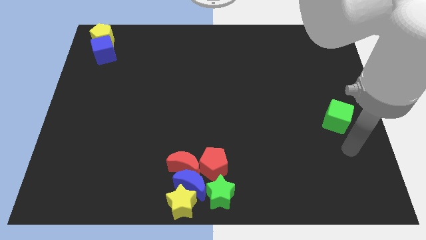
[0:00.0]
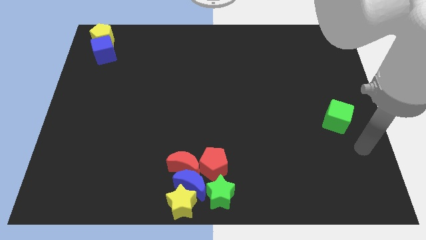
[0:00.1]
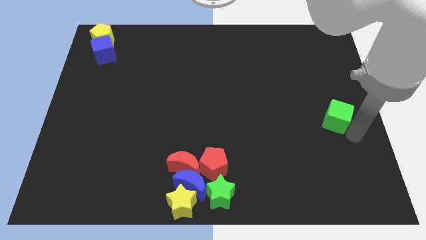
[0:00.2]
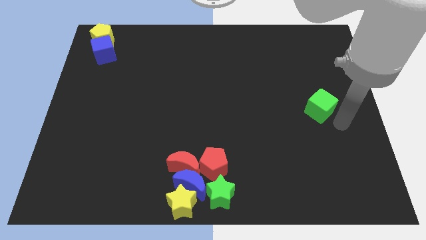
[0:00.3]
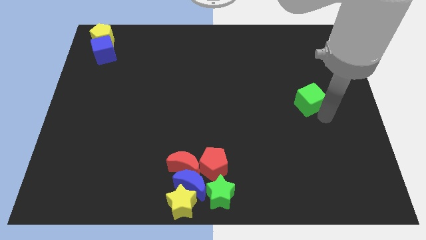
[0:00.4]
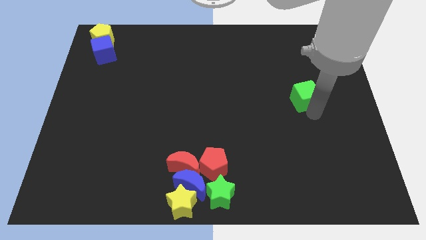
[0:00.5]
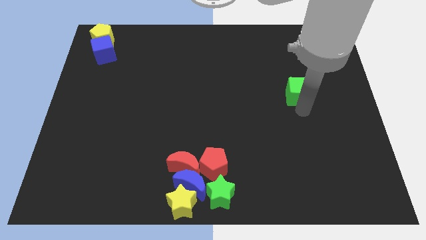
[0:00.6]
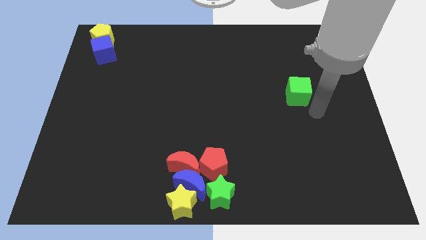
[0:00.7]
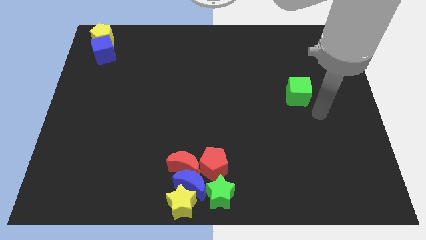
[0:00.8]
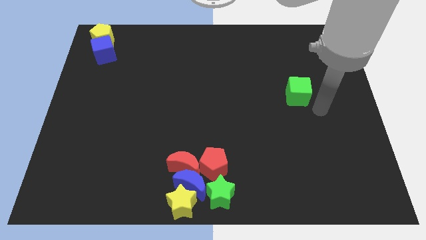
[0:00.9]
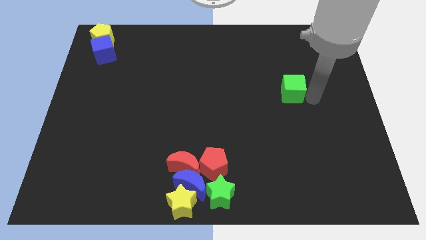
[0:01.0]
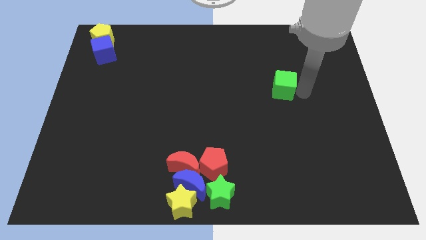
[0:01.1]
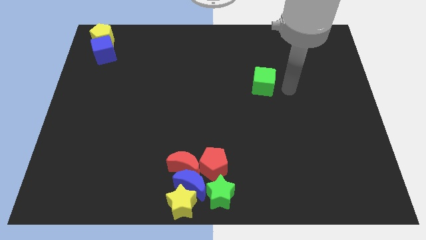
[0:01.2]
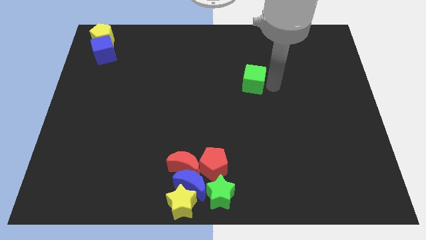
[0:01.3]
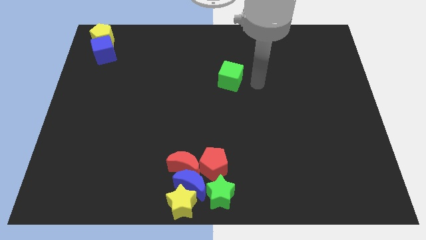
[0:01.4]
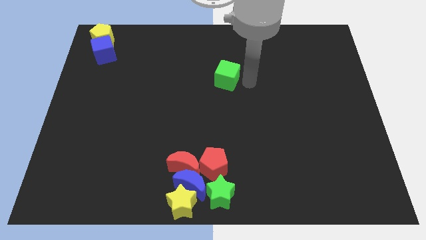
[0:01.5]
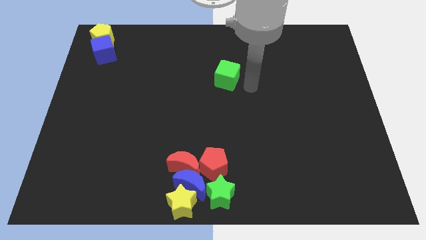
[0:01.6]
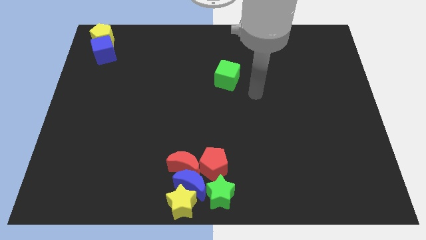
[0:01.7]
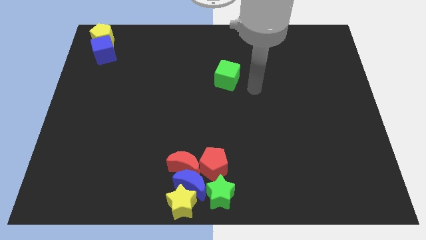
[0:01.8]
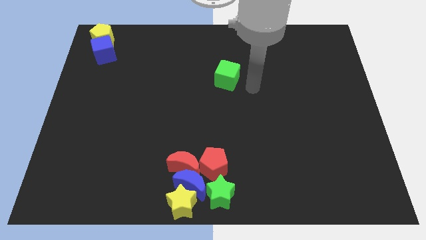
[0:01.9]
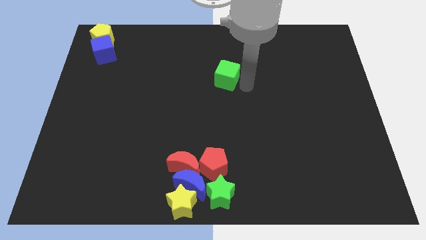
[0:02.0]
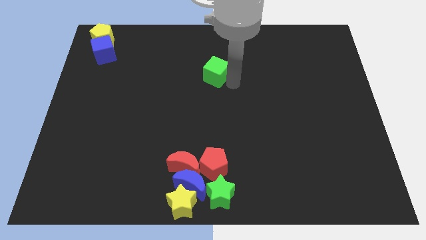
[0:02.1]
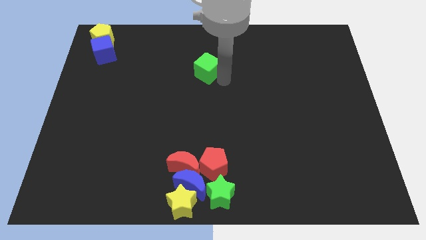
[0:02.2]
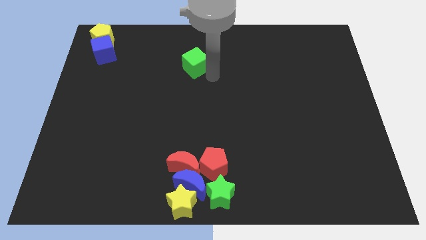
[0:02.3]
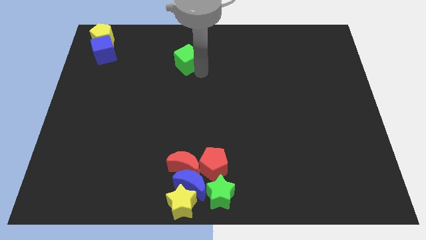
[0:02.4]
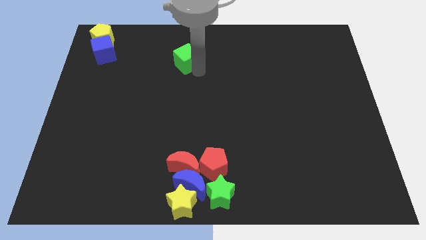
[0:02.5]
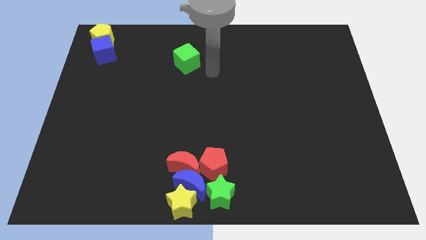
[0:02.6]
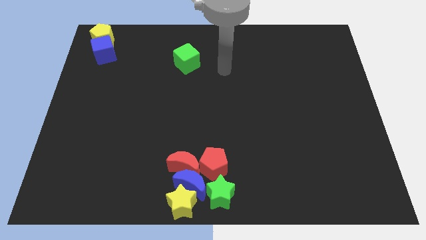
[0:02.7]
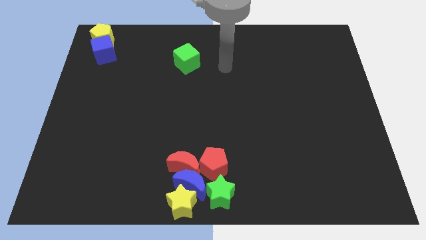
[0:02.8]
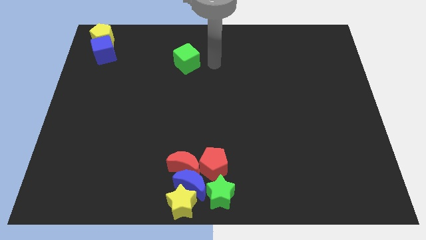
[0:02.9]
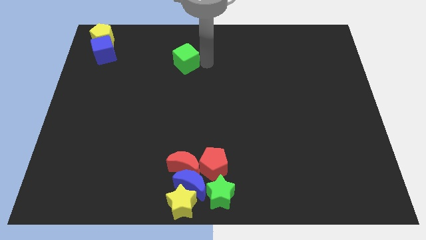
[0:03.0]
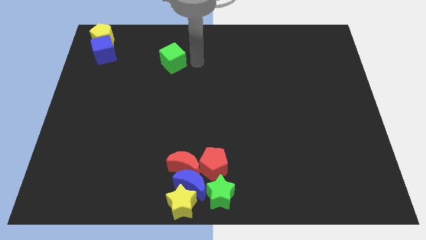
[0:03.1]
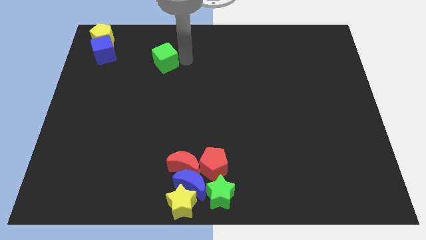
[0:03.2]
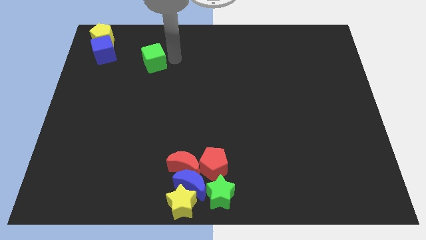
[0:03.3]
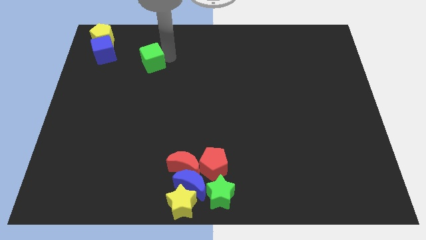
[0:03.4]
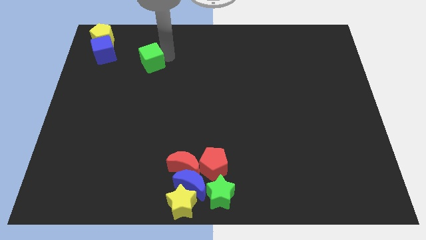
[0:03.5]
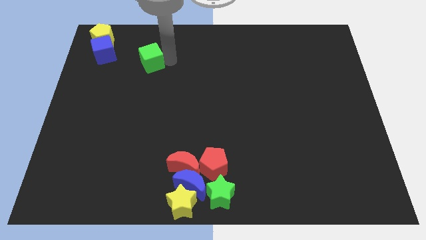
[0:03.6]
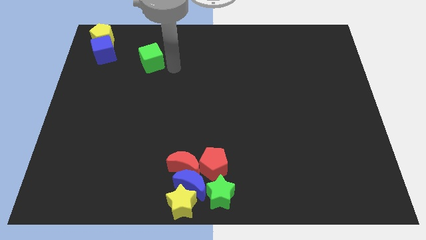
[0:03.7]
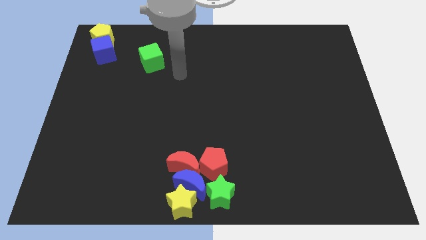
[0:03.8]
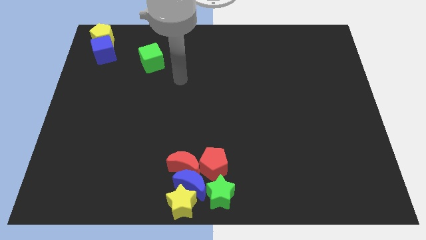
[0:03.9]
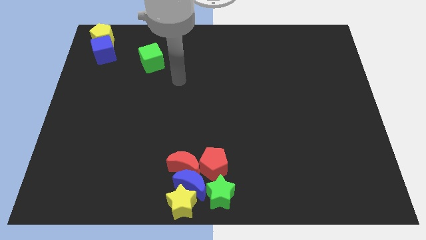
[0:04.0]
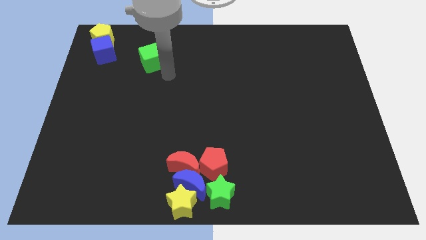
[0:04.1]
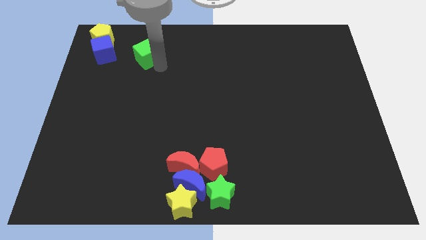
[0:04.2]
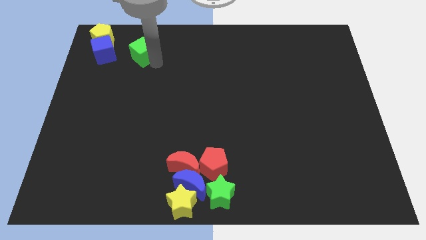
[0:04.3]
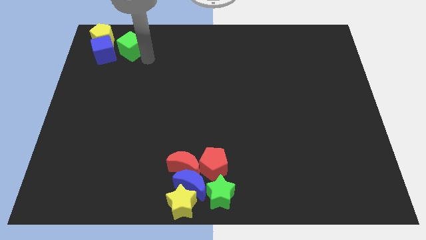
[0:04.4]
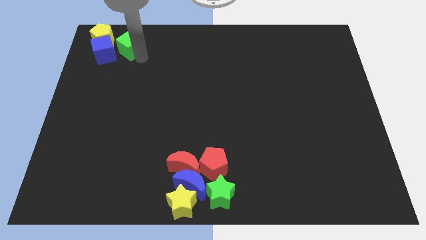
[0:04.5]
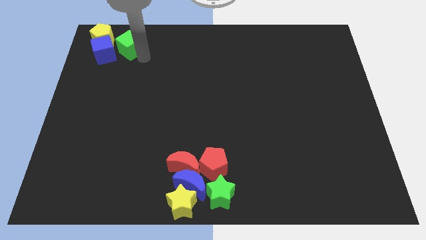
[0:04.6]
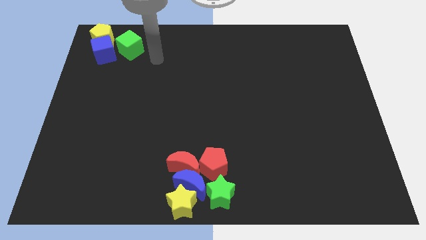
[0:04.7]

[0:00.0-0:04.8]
move the green cube right to the blue cube

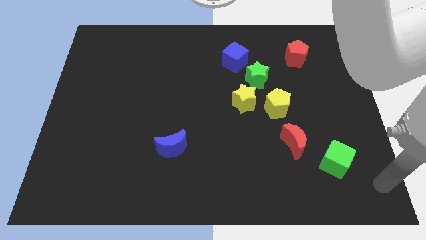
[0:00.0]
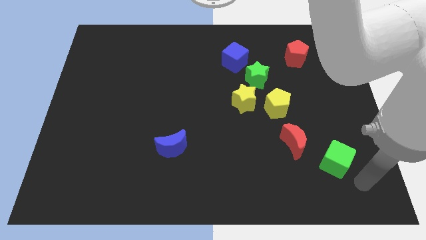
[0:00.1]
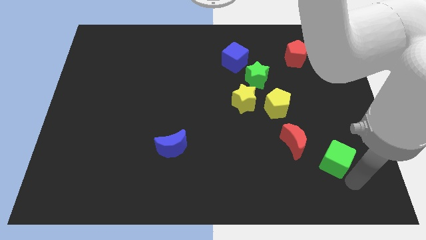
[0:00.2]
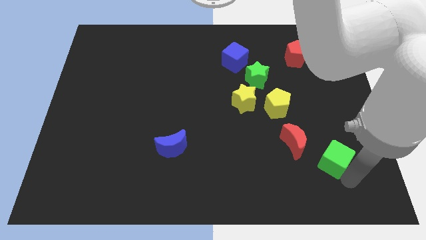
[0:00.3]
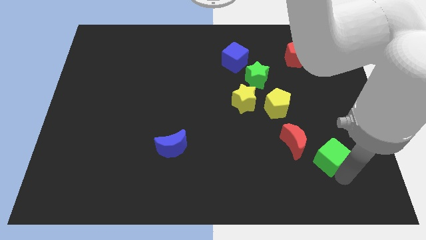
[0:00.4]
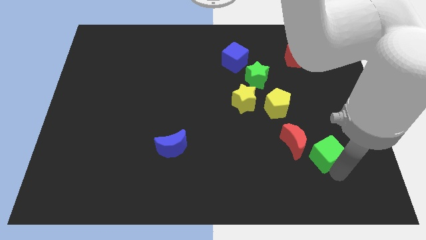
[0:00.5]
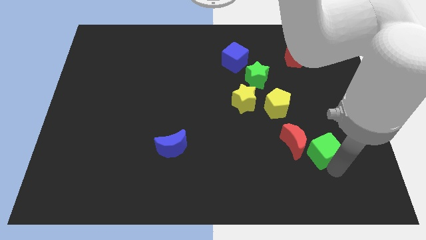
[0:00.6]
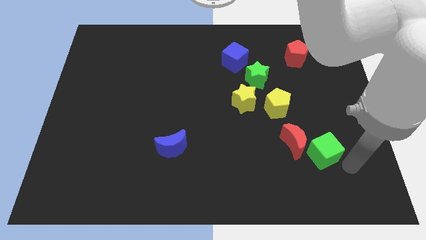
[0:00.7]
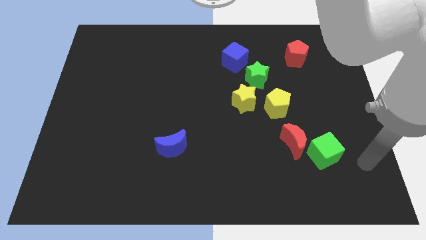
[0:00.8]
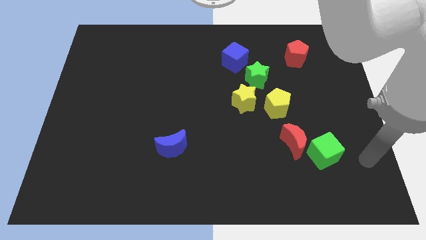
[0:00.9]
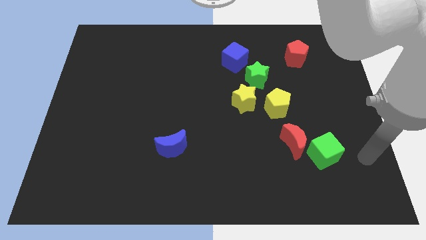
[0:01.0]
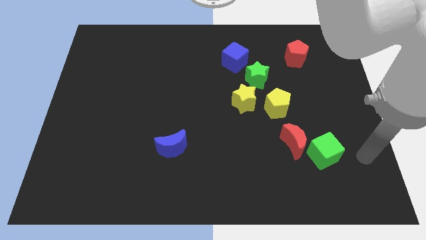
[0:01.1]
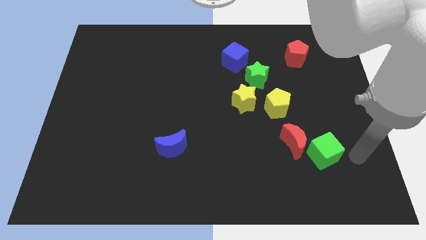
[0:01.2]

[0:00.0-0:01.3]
push the green cube to the right of the red crescent

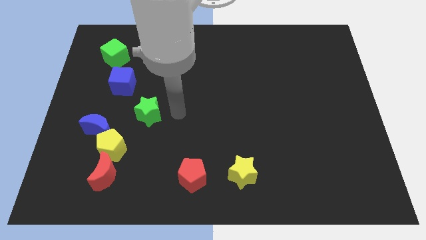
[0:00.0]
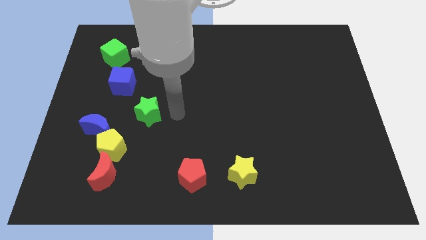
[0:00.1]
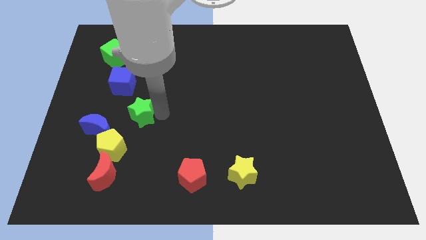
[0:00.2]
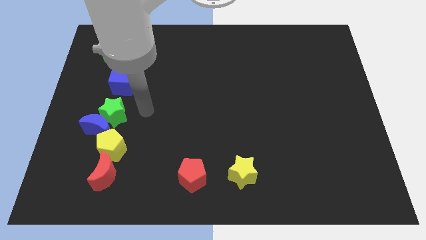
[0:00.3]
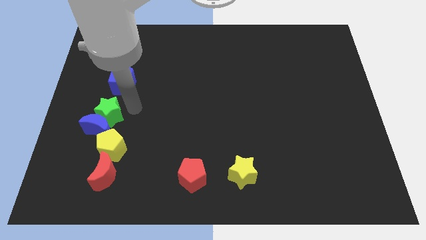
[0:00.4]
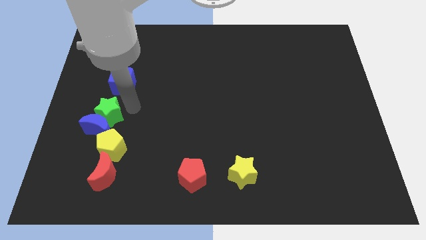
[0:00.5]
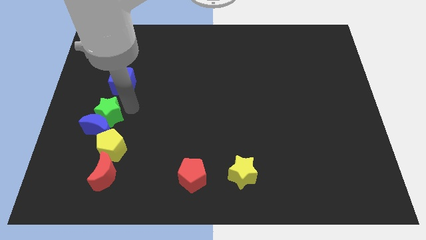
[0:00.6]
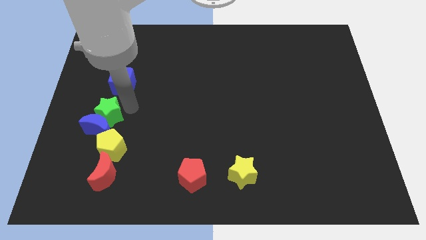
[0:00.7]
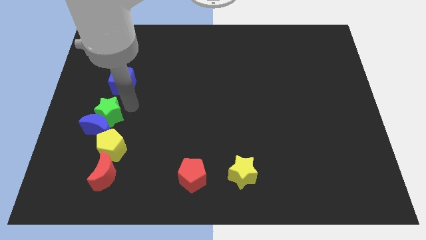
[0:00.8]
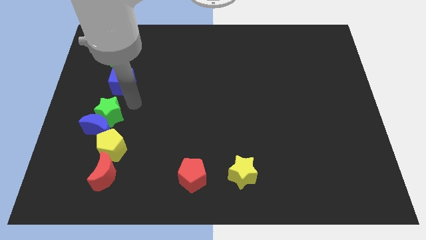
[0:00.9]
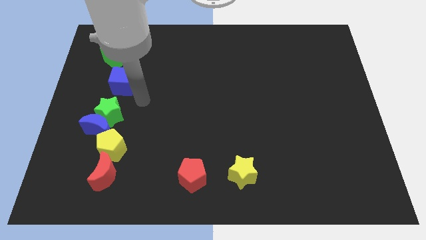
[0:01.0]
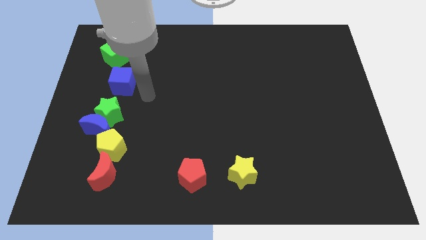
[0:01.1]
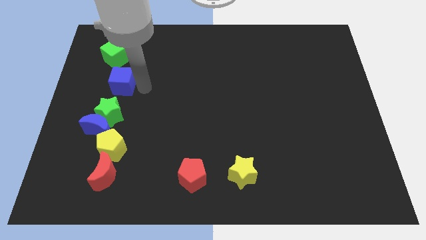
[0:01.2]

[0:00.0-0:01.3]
place the green star above the blue moon

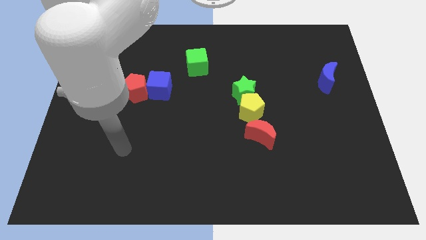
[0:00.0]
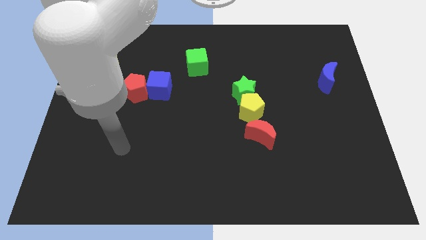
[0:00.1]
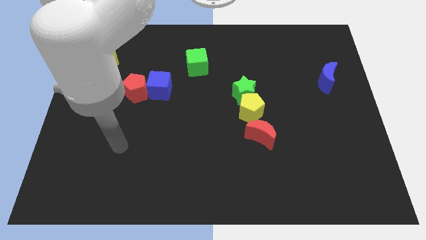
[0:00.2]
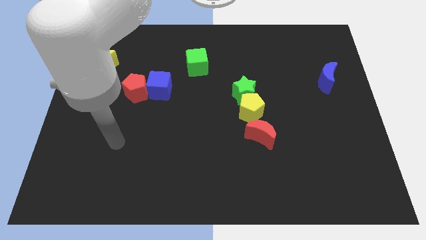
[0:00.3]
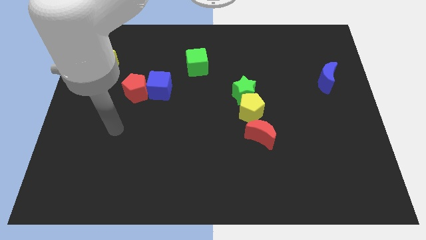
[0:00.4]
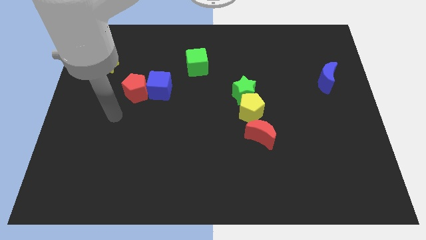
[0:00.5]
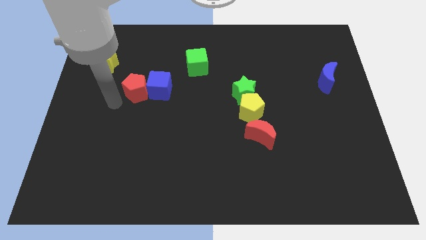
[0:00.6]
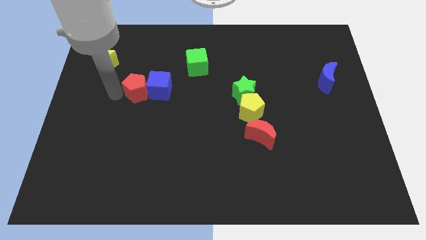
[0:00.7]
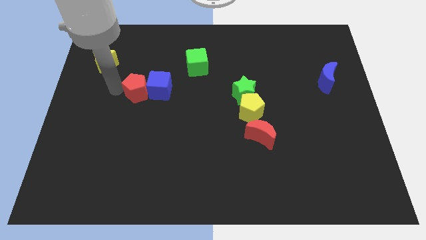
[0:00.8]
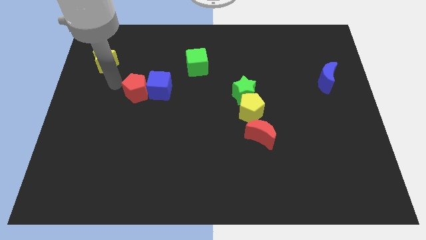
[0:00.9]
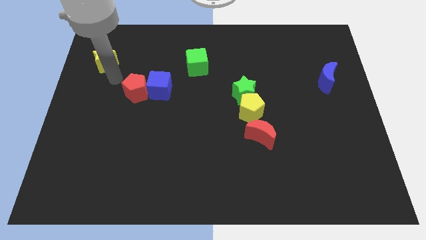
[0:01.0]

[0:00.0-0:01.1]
point your arm in between the yellow star and the red pentagon

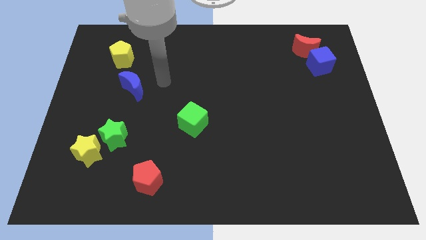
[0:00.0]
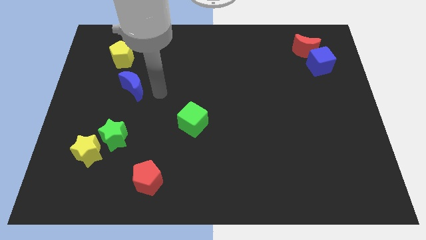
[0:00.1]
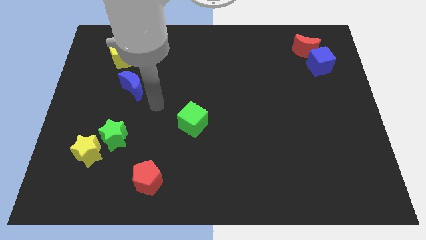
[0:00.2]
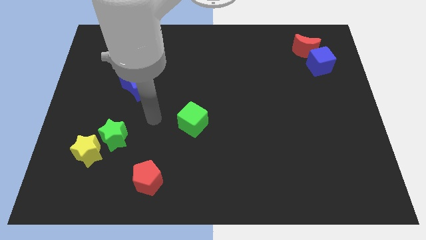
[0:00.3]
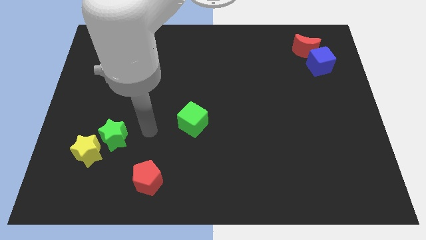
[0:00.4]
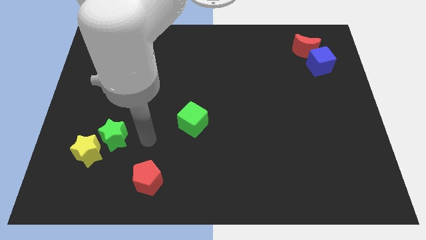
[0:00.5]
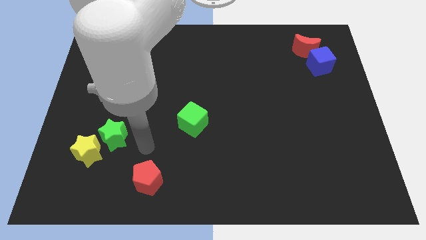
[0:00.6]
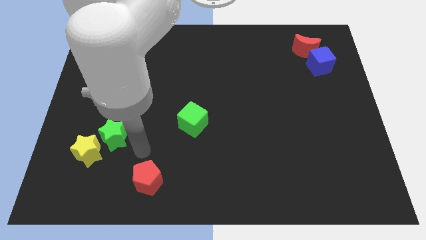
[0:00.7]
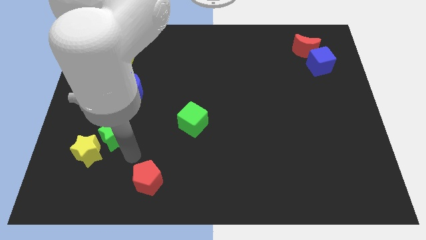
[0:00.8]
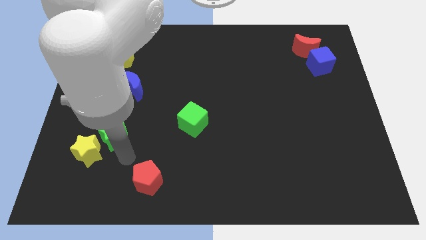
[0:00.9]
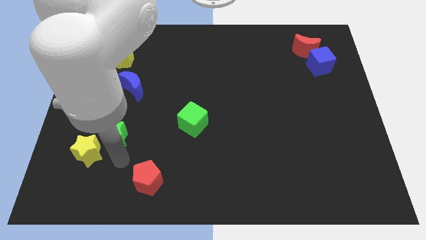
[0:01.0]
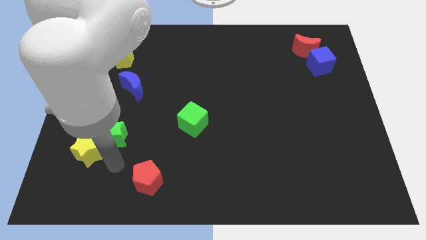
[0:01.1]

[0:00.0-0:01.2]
place arm near green star
